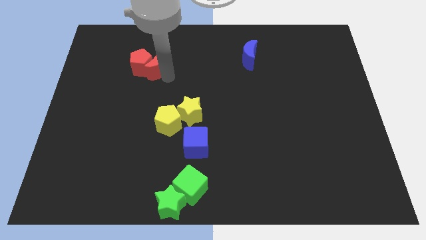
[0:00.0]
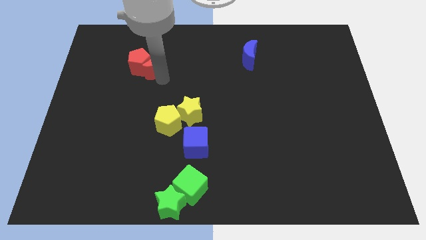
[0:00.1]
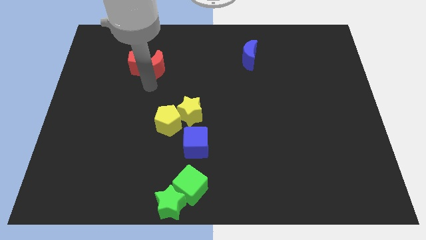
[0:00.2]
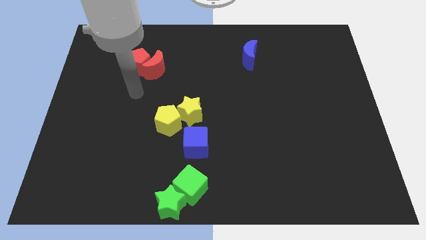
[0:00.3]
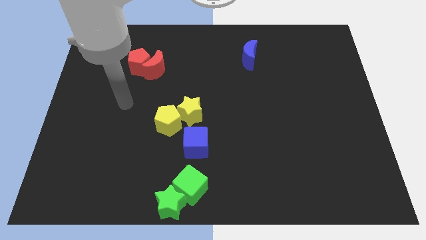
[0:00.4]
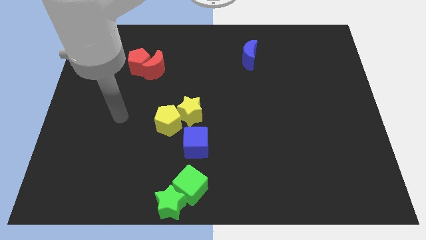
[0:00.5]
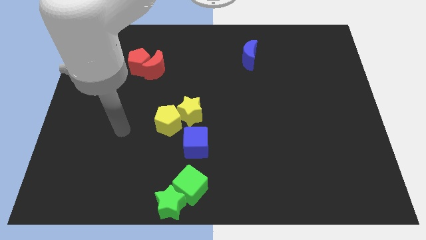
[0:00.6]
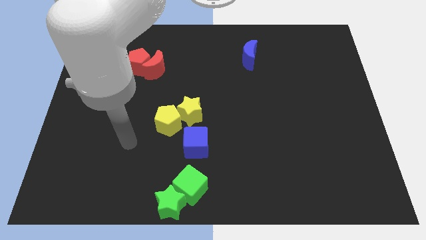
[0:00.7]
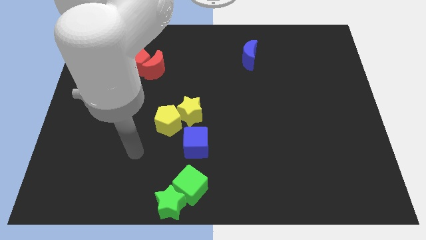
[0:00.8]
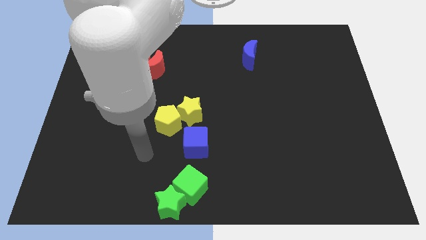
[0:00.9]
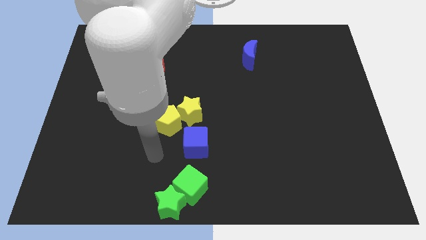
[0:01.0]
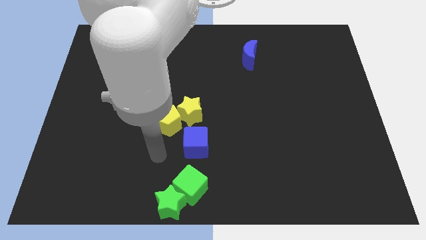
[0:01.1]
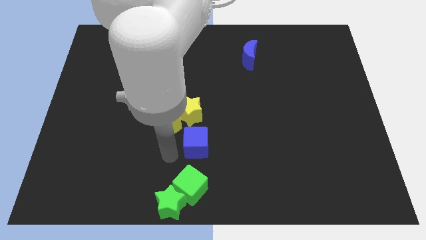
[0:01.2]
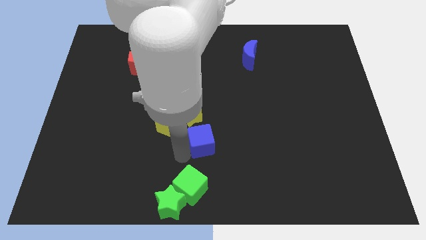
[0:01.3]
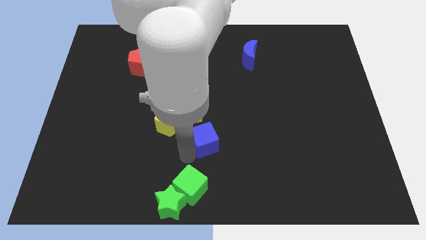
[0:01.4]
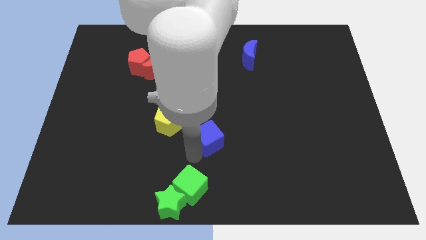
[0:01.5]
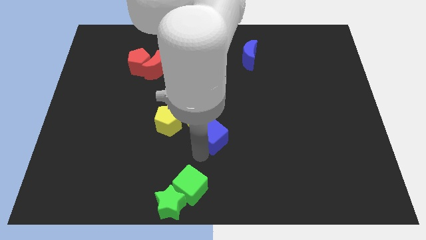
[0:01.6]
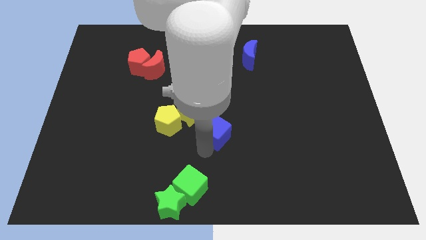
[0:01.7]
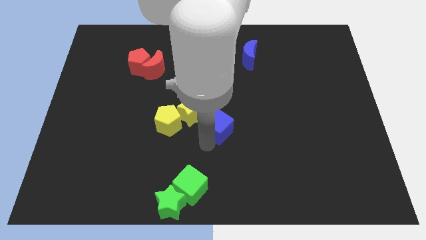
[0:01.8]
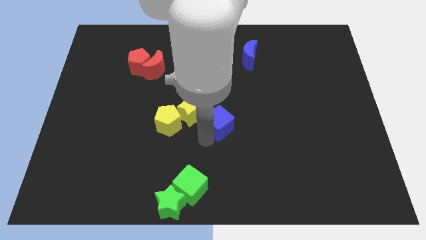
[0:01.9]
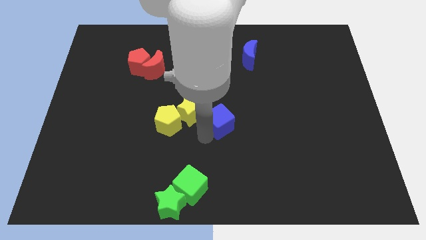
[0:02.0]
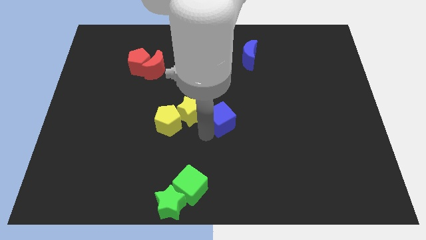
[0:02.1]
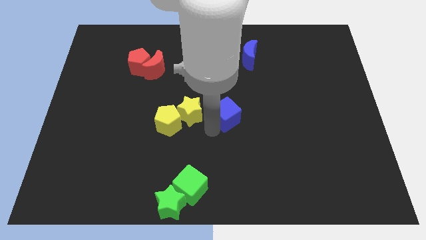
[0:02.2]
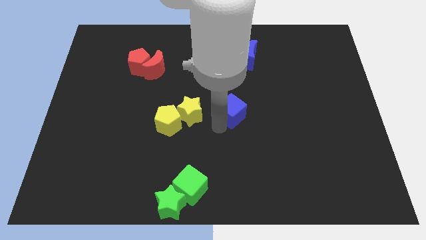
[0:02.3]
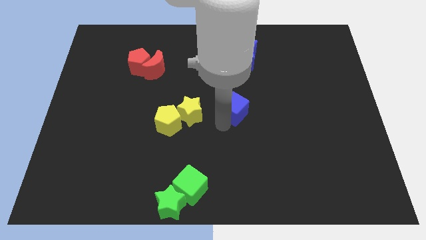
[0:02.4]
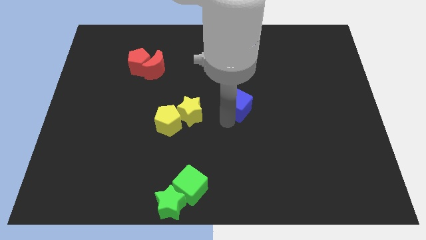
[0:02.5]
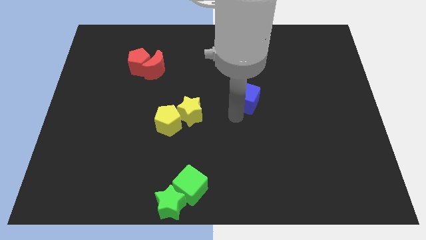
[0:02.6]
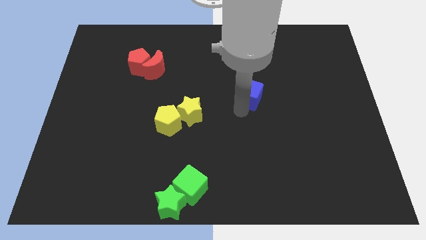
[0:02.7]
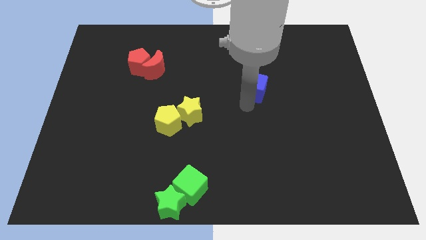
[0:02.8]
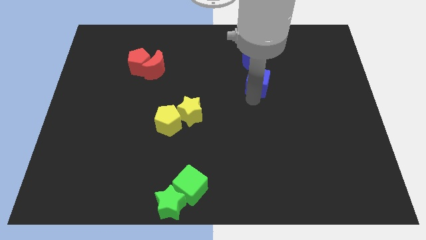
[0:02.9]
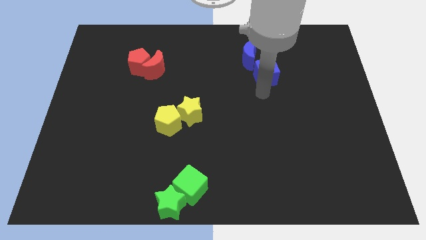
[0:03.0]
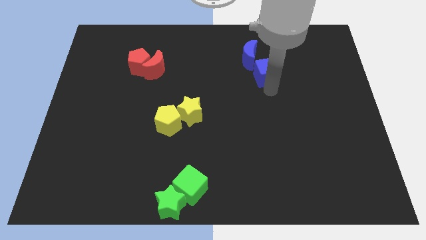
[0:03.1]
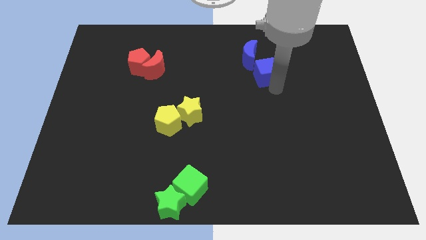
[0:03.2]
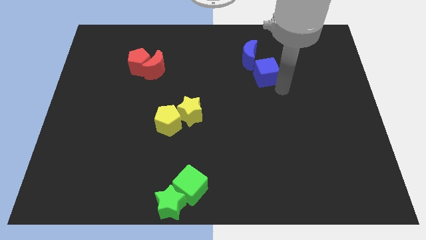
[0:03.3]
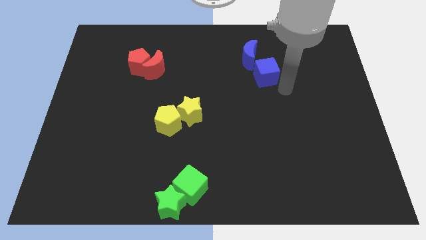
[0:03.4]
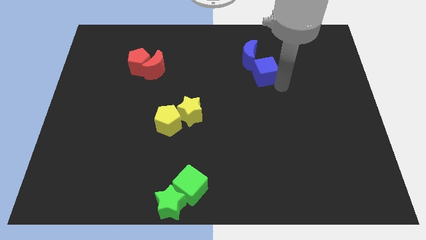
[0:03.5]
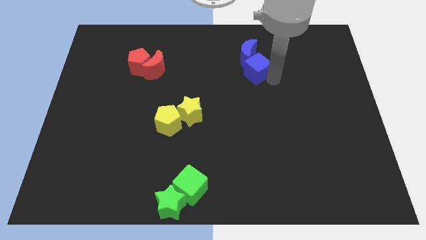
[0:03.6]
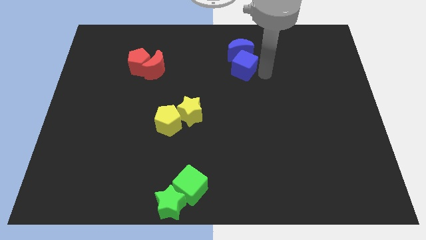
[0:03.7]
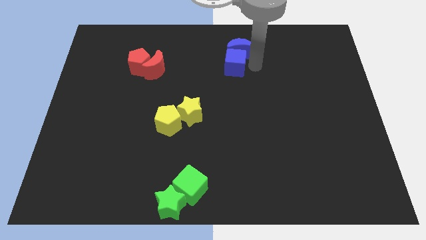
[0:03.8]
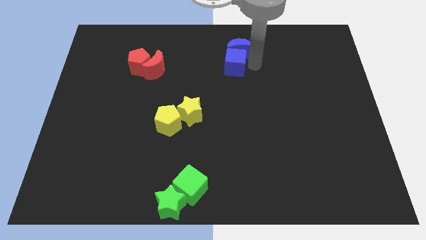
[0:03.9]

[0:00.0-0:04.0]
slide the blue cube into the bottom side of the blue crescent

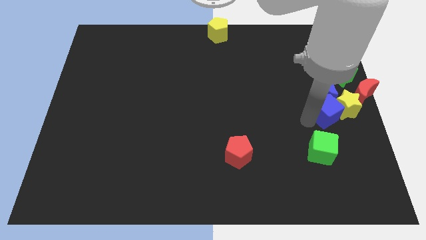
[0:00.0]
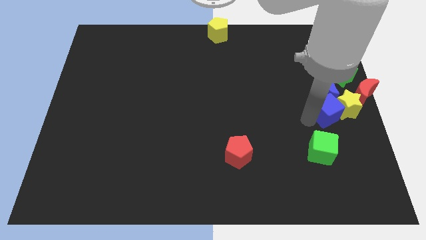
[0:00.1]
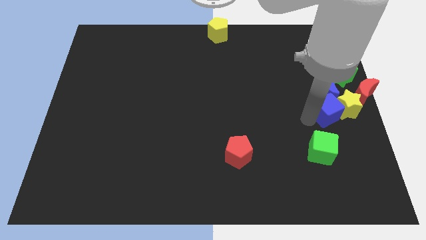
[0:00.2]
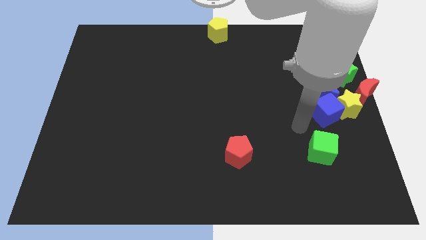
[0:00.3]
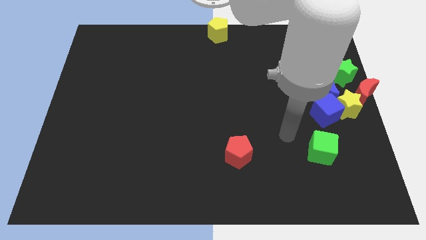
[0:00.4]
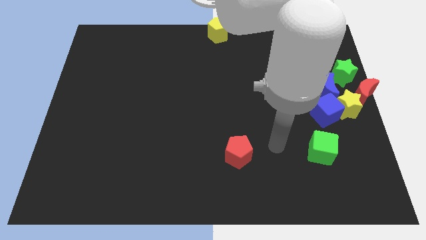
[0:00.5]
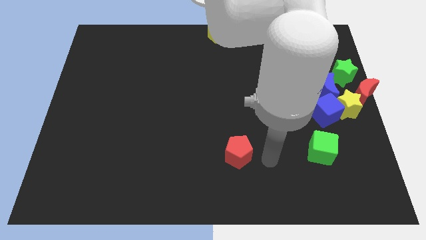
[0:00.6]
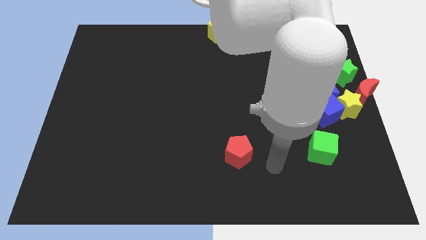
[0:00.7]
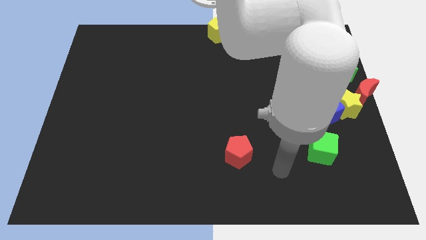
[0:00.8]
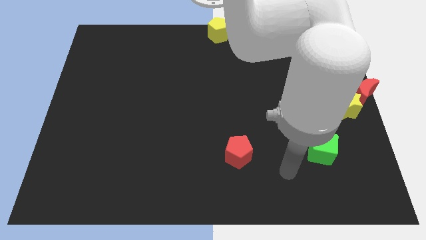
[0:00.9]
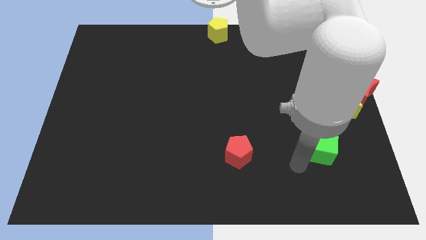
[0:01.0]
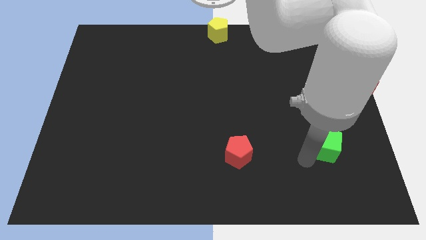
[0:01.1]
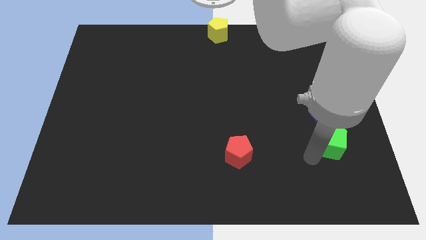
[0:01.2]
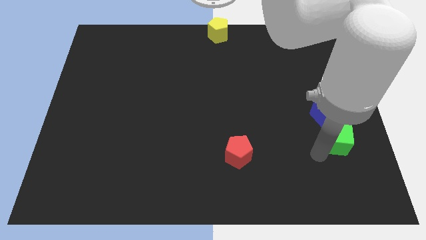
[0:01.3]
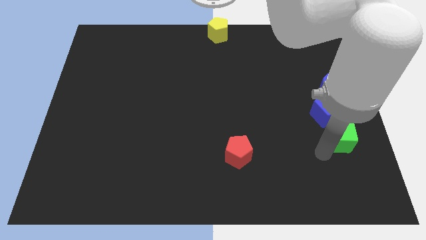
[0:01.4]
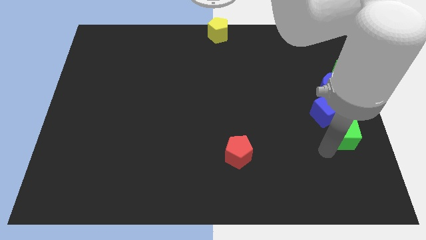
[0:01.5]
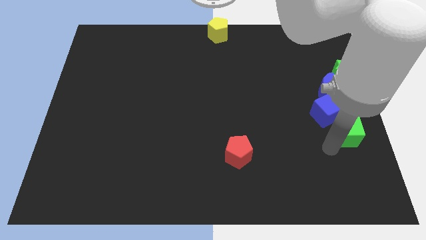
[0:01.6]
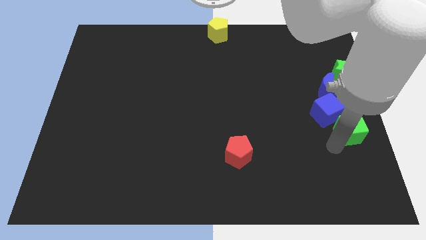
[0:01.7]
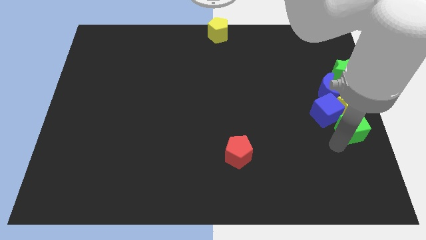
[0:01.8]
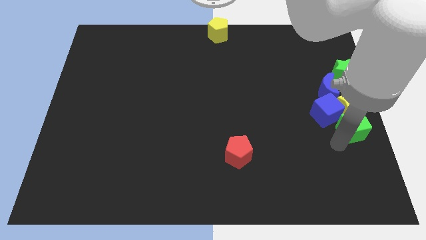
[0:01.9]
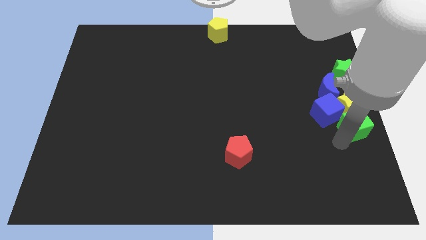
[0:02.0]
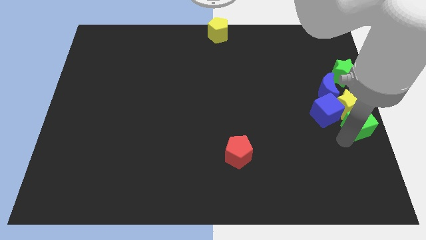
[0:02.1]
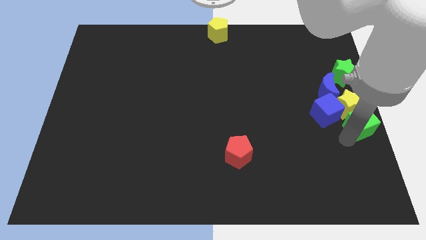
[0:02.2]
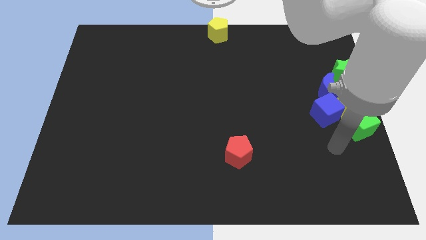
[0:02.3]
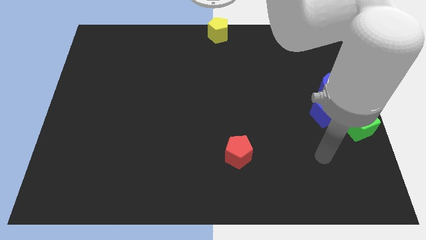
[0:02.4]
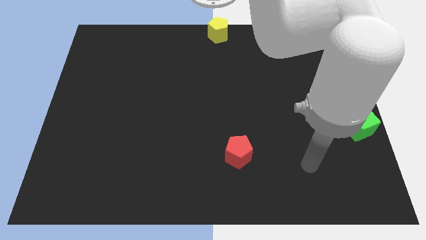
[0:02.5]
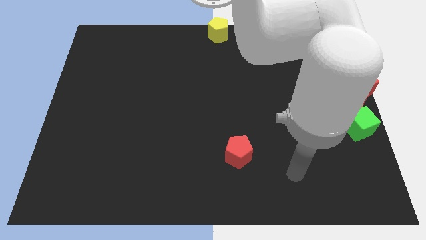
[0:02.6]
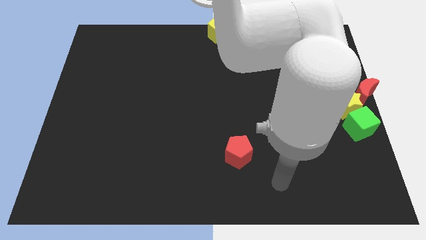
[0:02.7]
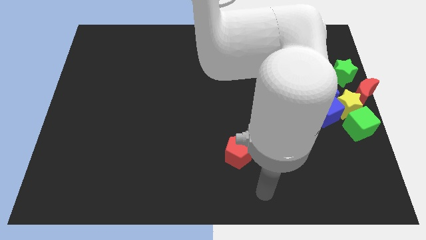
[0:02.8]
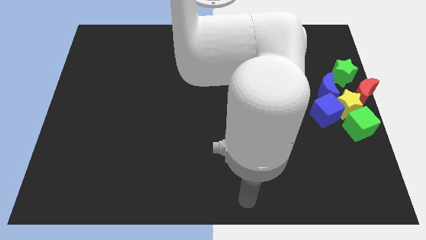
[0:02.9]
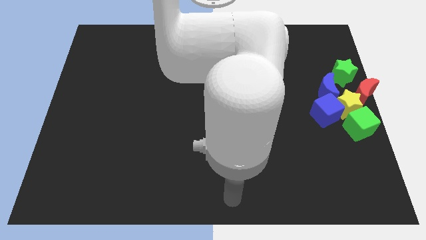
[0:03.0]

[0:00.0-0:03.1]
place the green cube at the bottom side of the yellow star

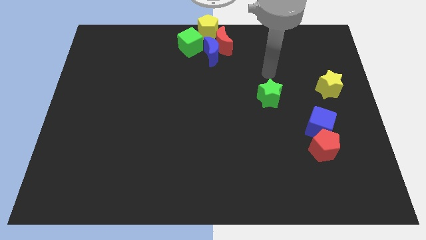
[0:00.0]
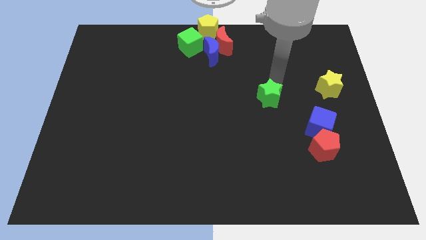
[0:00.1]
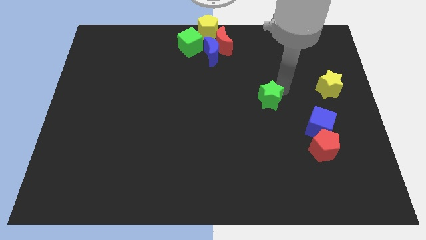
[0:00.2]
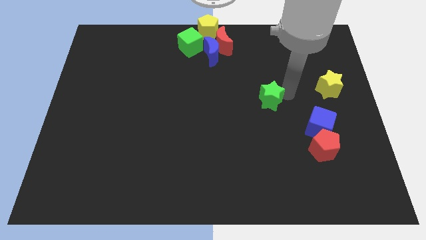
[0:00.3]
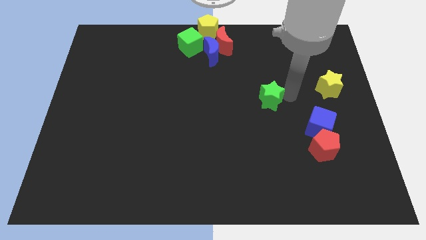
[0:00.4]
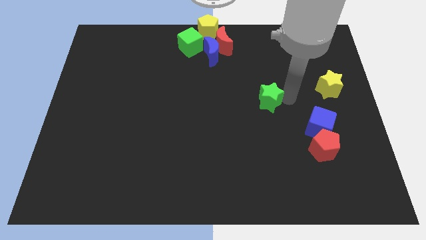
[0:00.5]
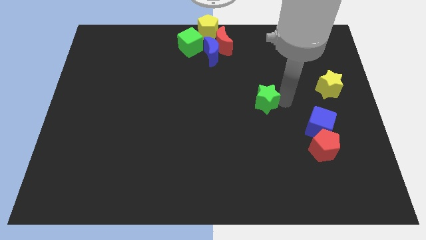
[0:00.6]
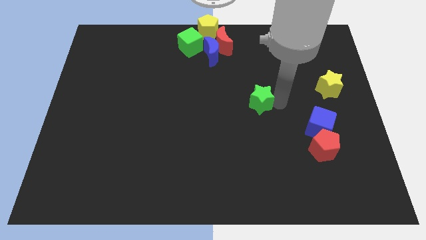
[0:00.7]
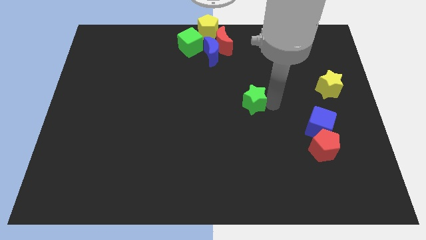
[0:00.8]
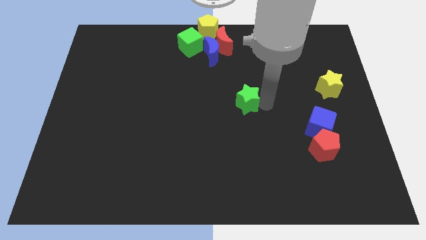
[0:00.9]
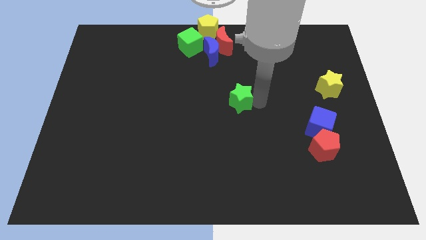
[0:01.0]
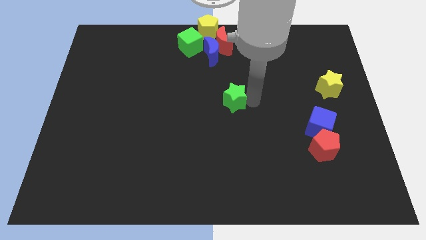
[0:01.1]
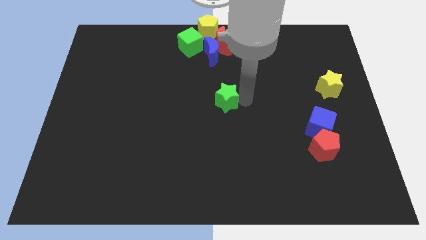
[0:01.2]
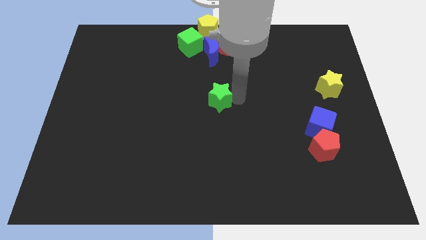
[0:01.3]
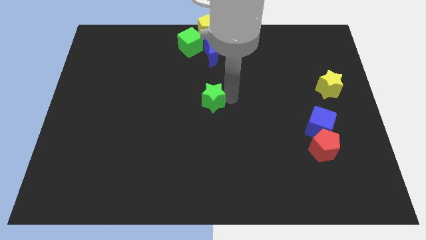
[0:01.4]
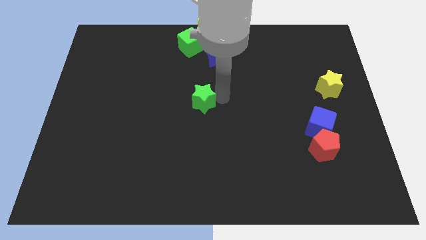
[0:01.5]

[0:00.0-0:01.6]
move the green star to the center of the board

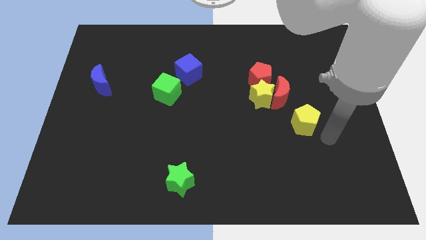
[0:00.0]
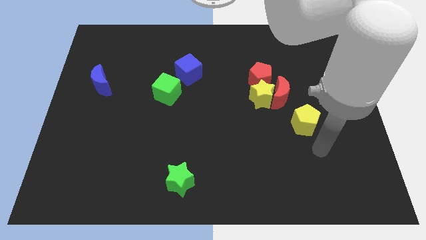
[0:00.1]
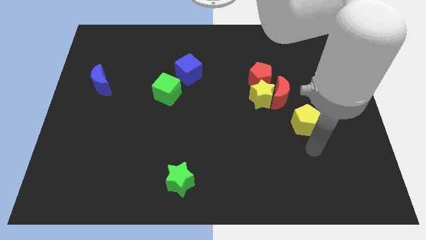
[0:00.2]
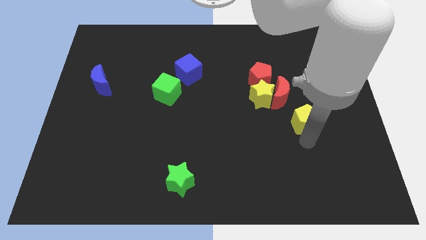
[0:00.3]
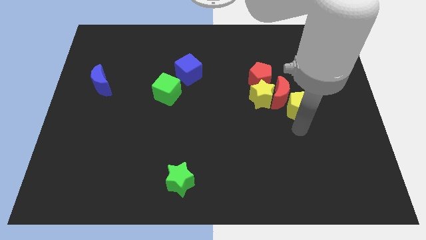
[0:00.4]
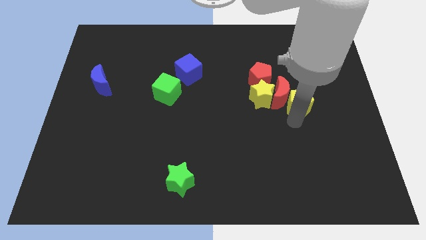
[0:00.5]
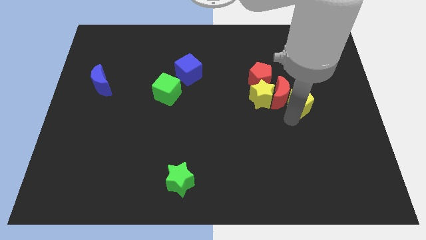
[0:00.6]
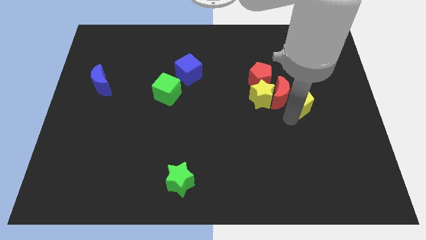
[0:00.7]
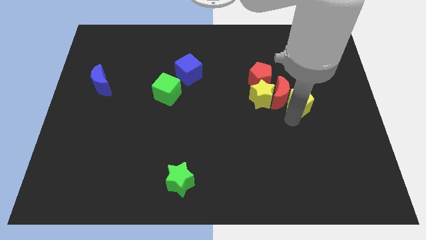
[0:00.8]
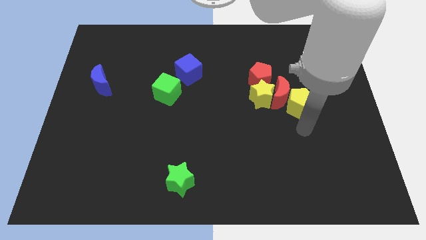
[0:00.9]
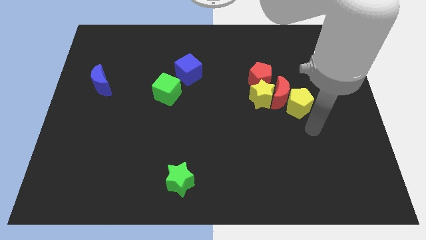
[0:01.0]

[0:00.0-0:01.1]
move the yellow pentagon close to the red crescent
